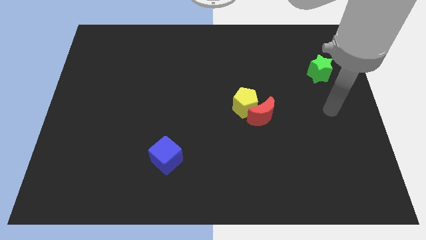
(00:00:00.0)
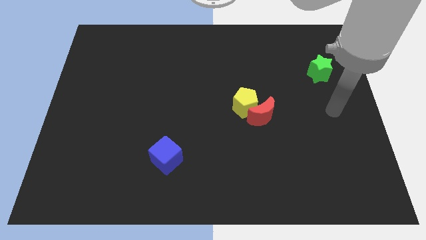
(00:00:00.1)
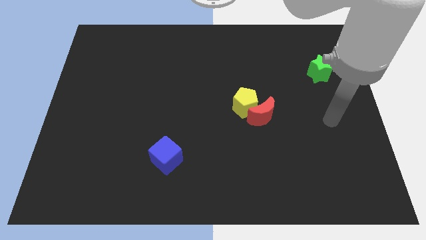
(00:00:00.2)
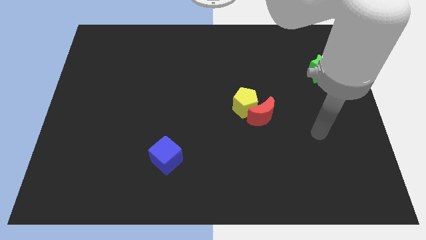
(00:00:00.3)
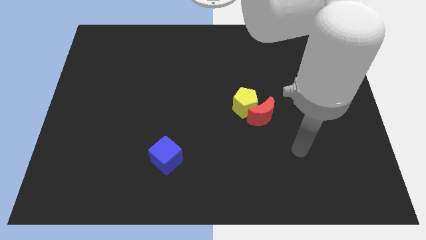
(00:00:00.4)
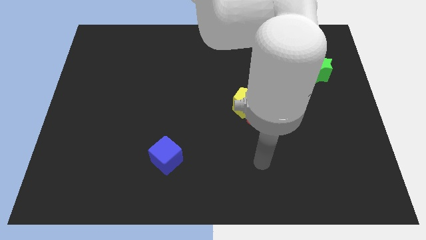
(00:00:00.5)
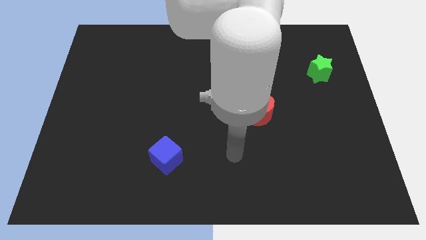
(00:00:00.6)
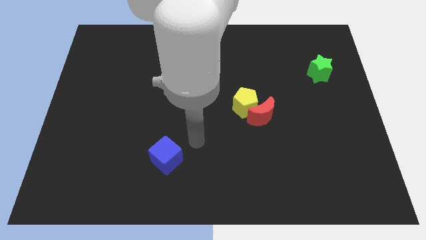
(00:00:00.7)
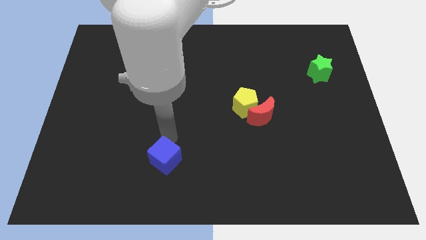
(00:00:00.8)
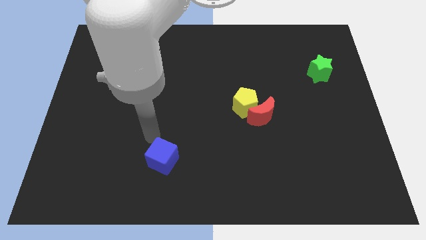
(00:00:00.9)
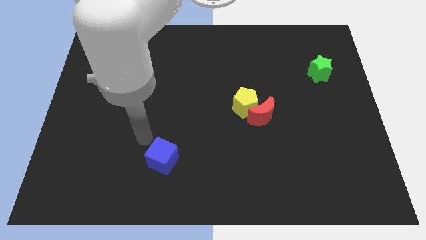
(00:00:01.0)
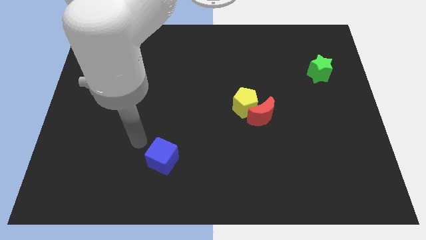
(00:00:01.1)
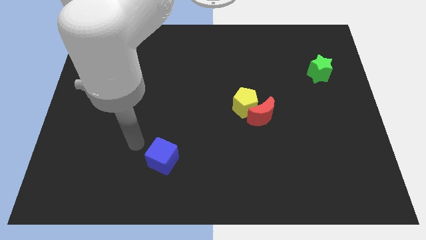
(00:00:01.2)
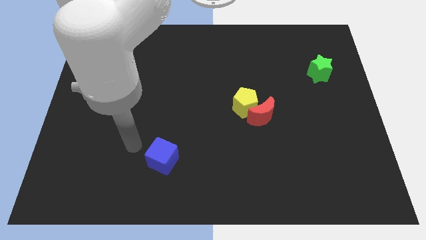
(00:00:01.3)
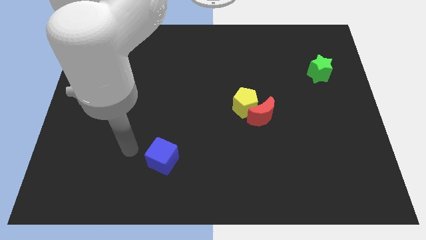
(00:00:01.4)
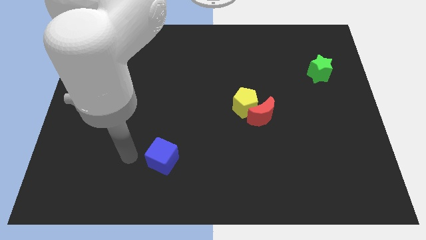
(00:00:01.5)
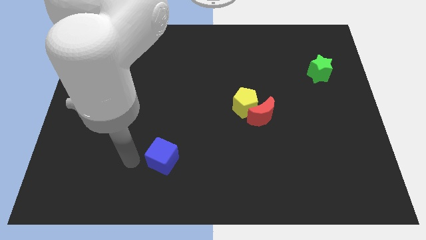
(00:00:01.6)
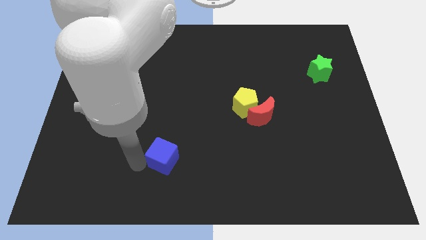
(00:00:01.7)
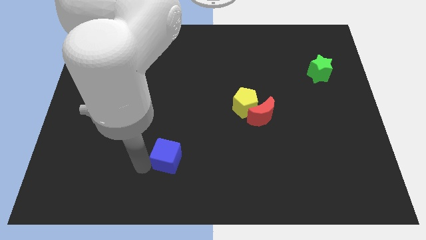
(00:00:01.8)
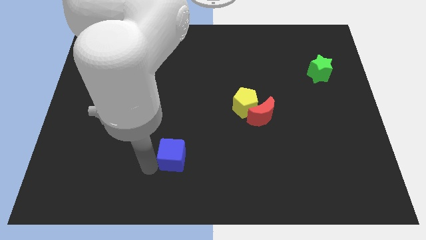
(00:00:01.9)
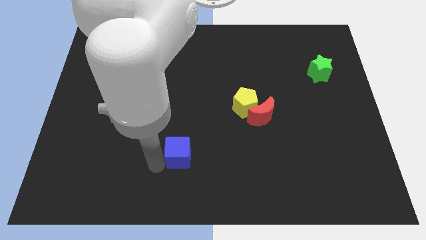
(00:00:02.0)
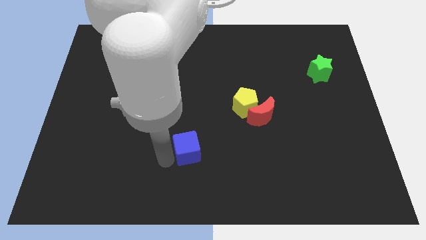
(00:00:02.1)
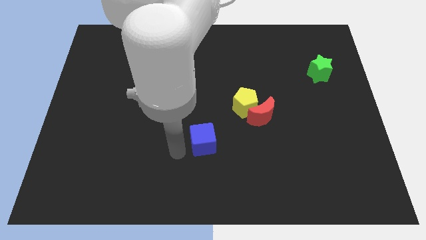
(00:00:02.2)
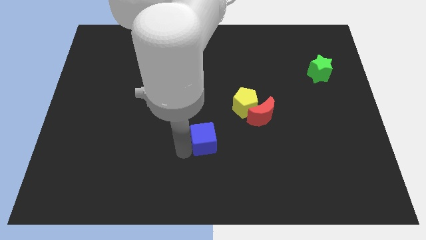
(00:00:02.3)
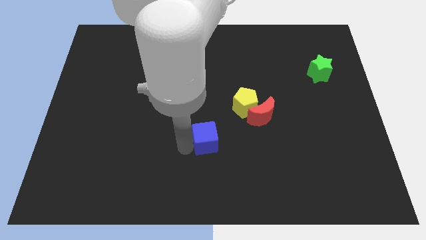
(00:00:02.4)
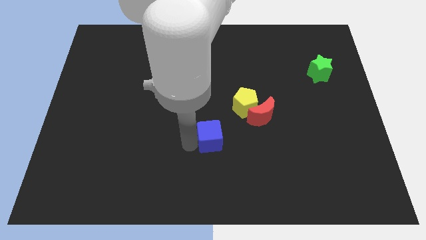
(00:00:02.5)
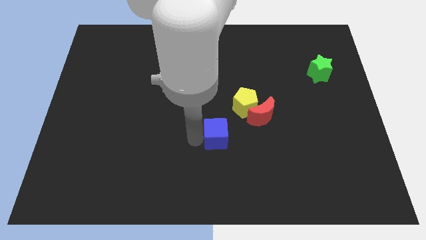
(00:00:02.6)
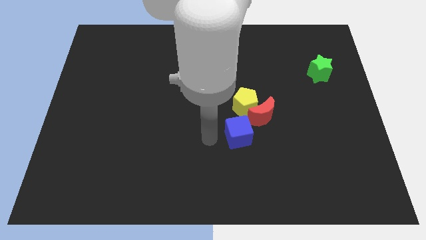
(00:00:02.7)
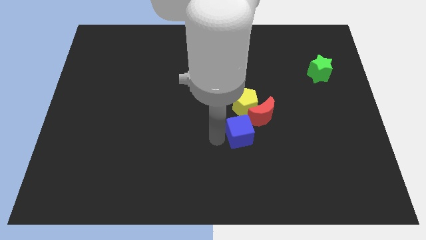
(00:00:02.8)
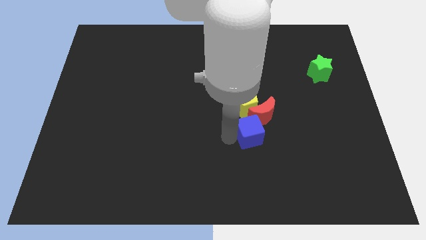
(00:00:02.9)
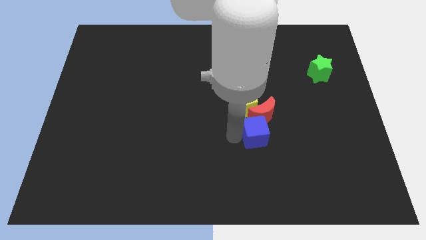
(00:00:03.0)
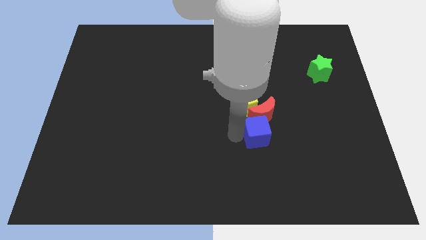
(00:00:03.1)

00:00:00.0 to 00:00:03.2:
move the cube towards the red block

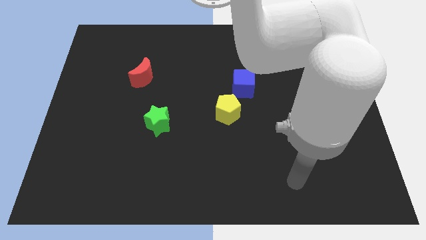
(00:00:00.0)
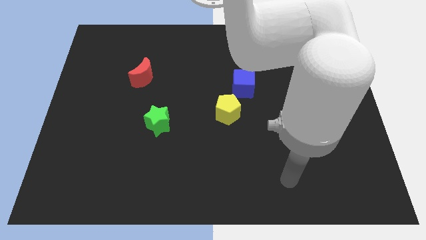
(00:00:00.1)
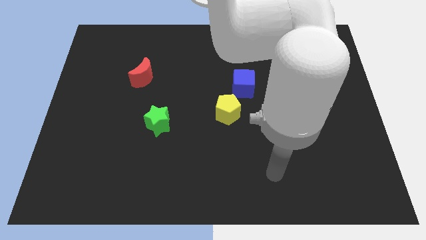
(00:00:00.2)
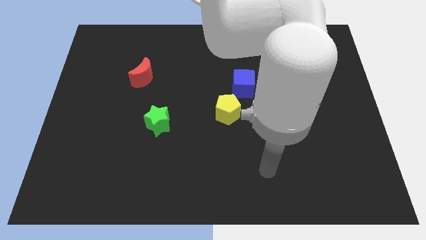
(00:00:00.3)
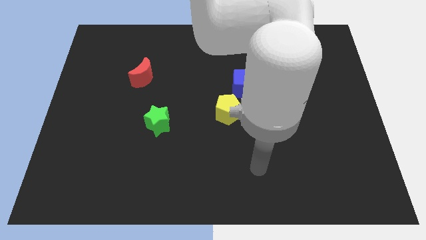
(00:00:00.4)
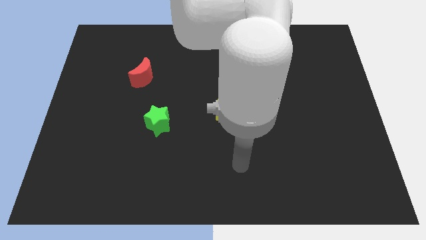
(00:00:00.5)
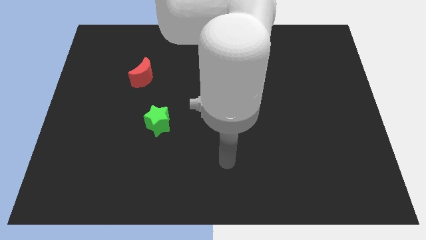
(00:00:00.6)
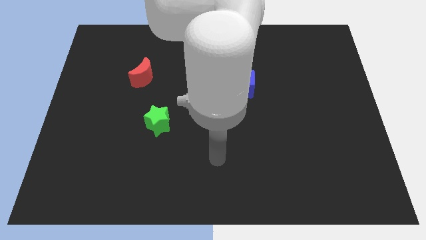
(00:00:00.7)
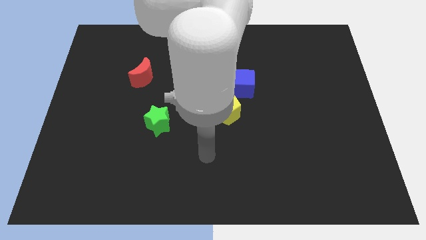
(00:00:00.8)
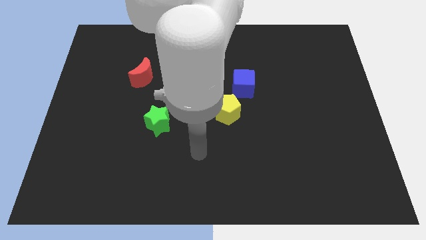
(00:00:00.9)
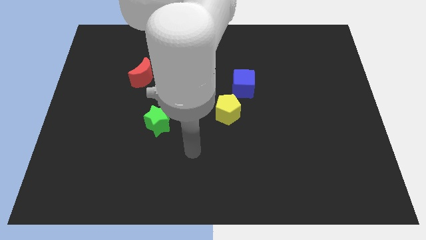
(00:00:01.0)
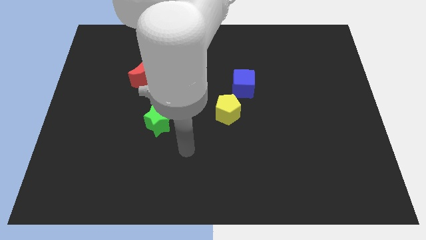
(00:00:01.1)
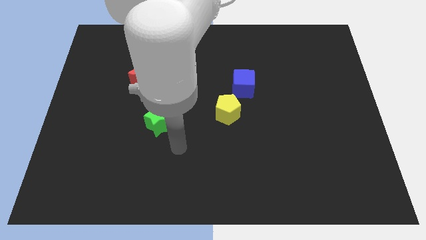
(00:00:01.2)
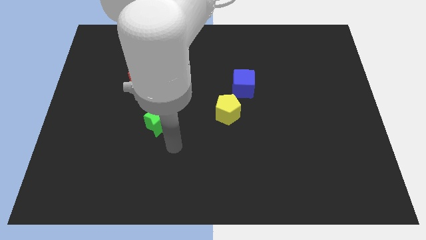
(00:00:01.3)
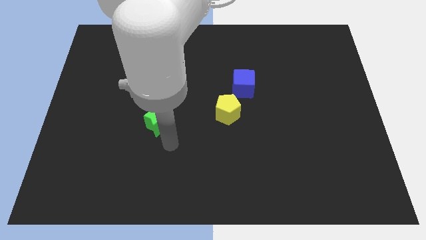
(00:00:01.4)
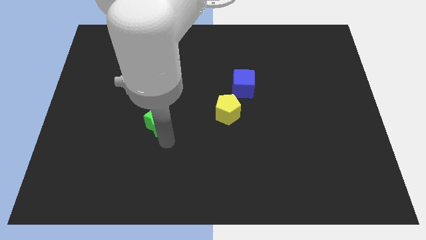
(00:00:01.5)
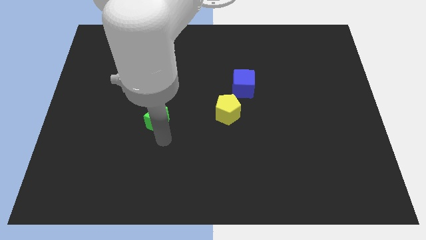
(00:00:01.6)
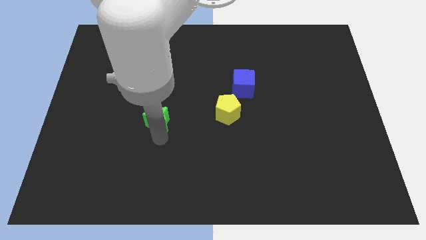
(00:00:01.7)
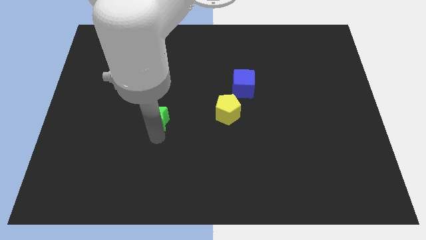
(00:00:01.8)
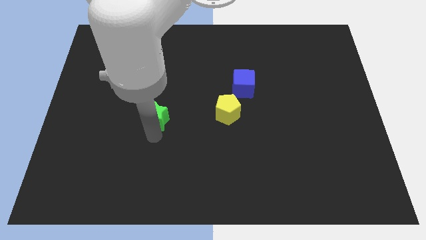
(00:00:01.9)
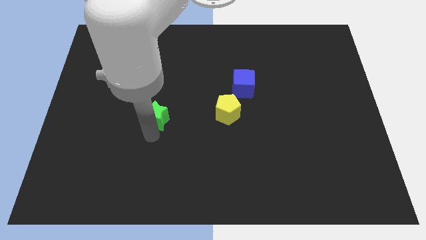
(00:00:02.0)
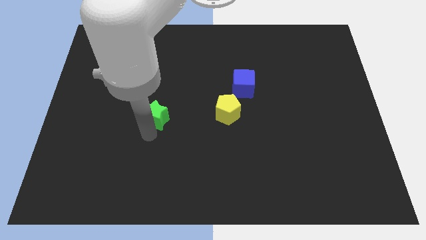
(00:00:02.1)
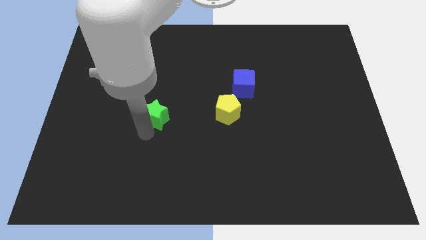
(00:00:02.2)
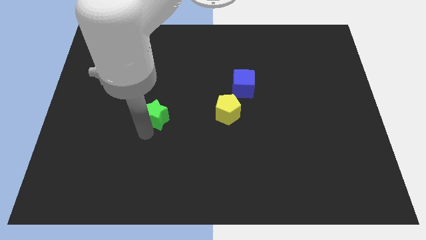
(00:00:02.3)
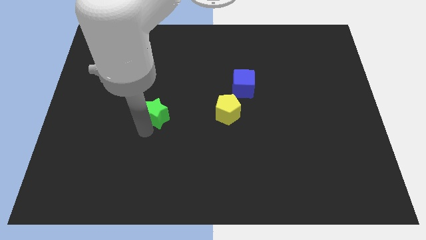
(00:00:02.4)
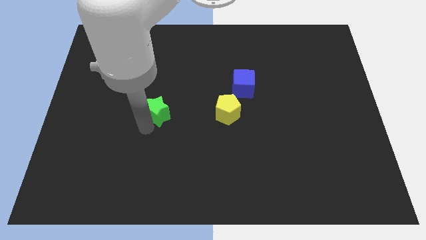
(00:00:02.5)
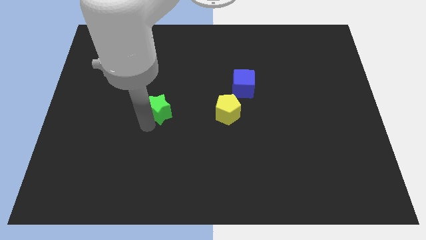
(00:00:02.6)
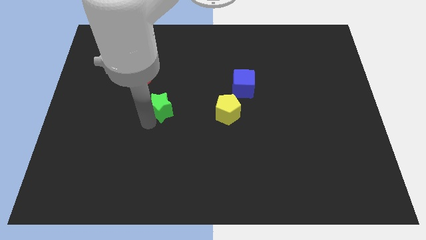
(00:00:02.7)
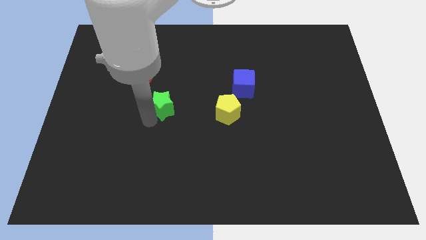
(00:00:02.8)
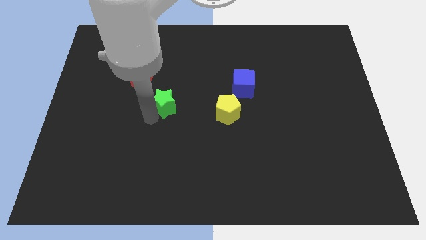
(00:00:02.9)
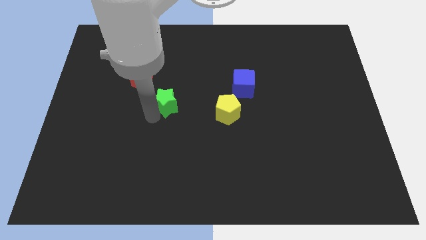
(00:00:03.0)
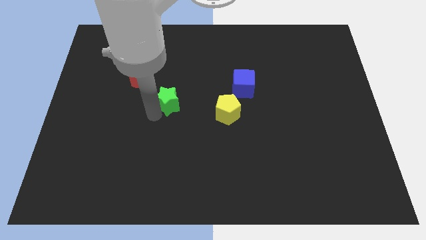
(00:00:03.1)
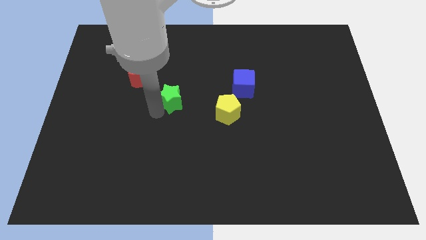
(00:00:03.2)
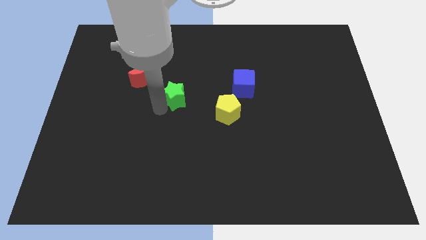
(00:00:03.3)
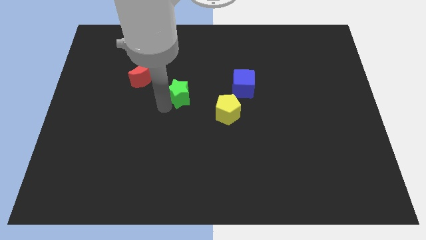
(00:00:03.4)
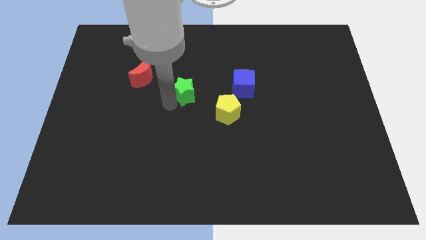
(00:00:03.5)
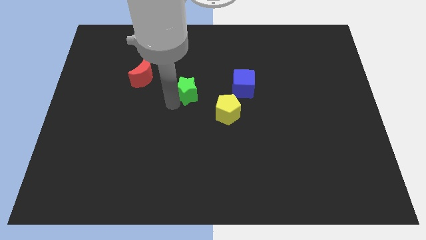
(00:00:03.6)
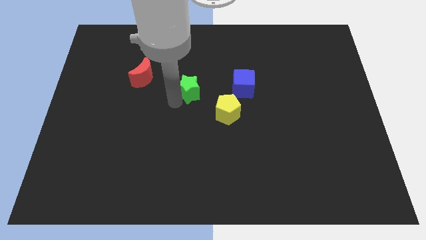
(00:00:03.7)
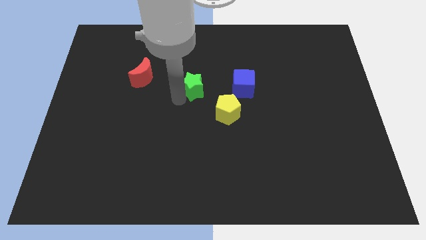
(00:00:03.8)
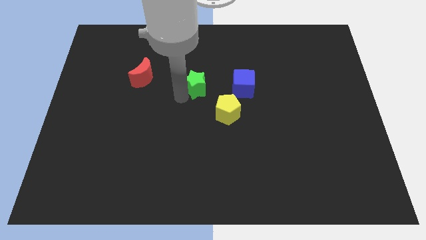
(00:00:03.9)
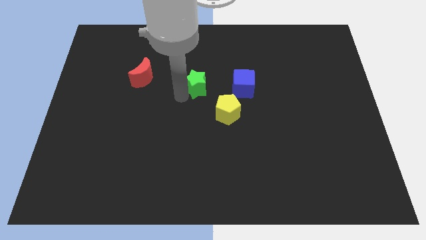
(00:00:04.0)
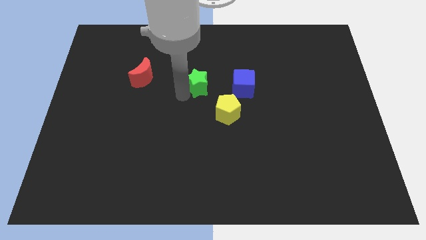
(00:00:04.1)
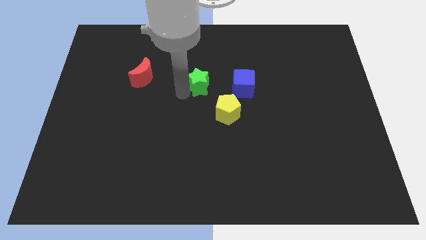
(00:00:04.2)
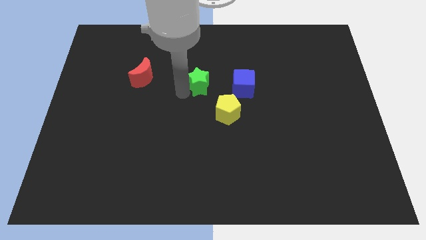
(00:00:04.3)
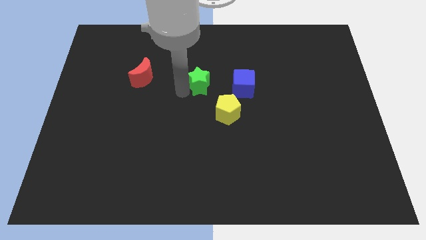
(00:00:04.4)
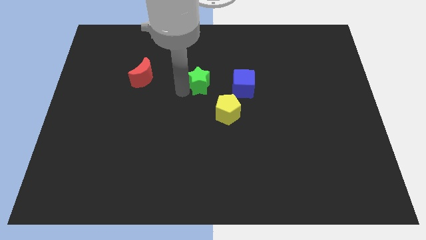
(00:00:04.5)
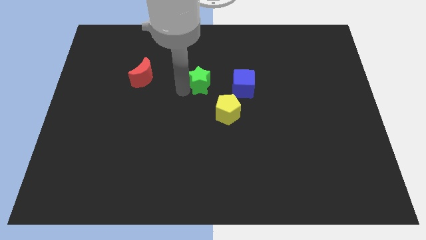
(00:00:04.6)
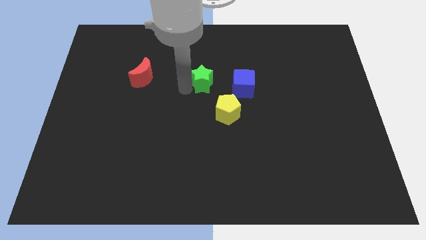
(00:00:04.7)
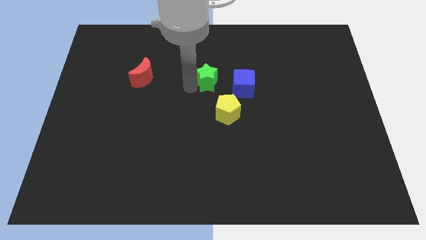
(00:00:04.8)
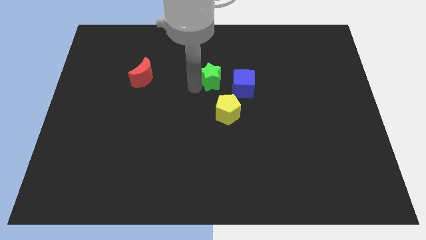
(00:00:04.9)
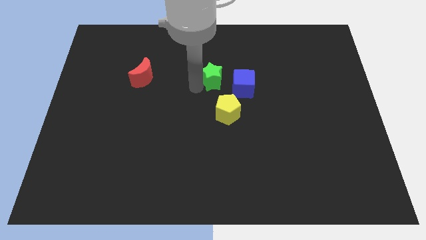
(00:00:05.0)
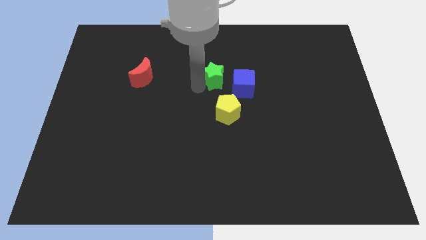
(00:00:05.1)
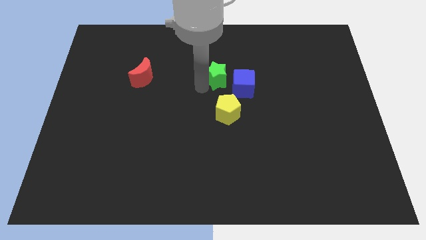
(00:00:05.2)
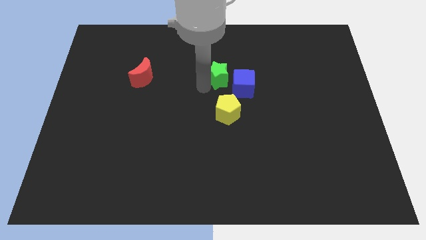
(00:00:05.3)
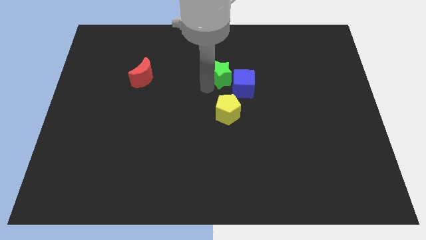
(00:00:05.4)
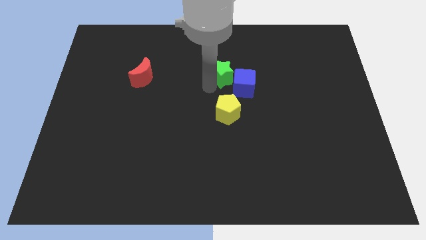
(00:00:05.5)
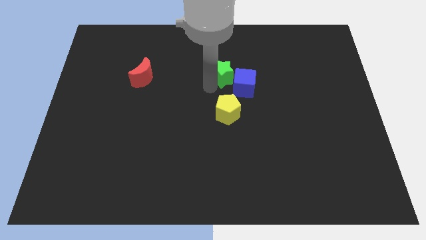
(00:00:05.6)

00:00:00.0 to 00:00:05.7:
push the green block close to the blue cube
